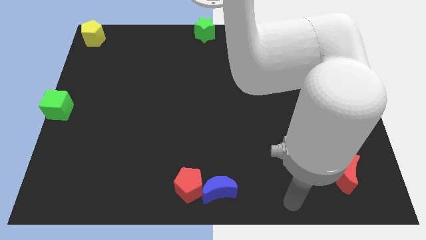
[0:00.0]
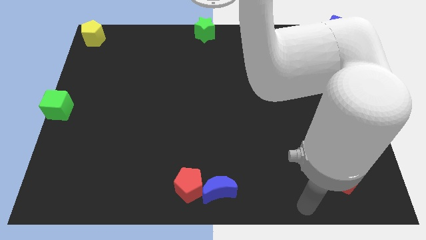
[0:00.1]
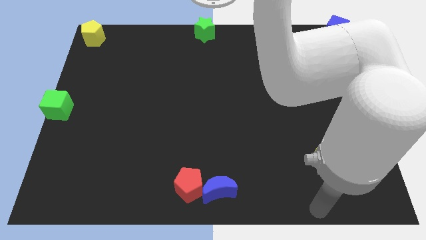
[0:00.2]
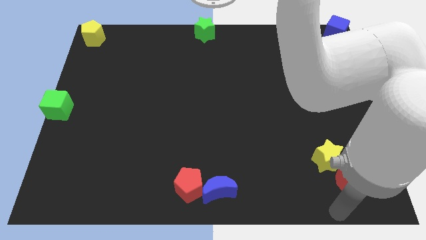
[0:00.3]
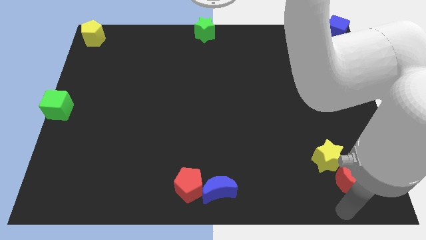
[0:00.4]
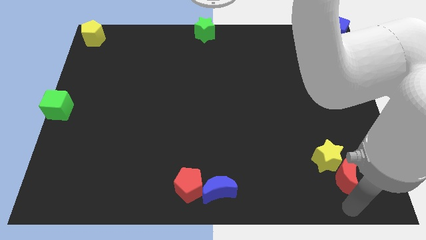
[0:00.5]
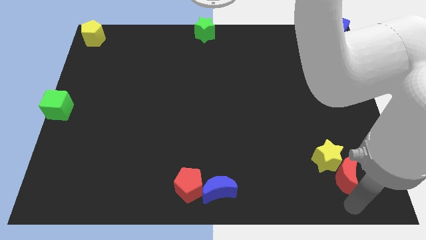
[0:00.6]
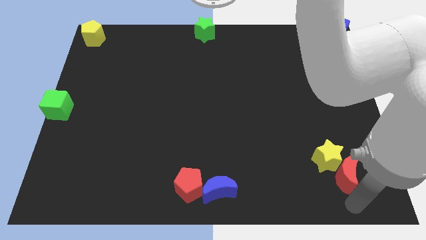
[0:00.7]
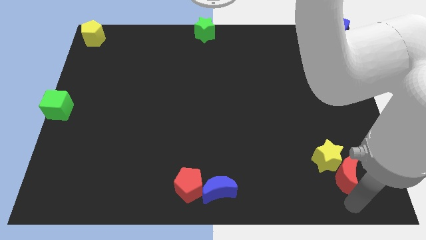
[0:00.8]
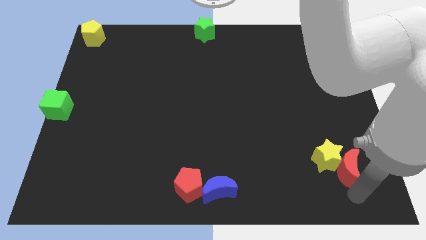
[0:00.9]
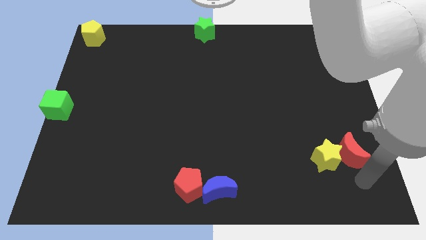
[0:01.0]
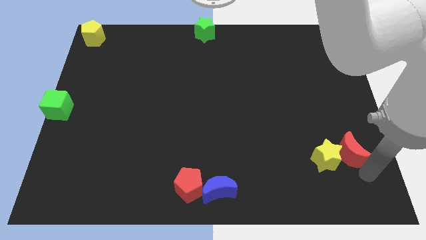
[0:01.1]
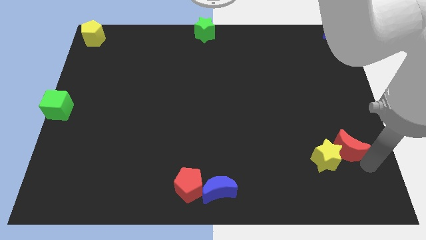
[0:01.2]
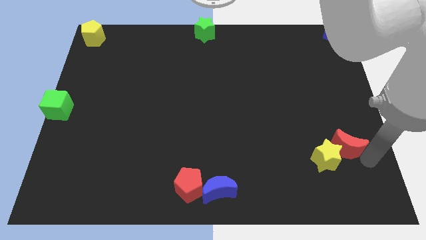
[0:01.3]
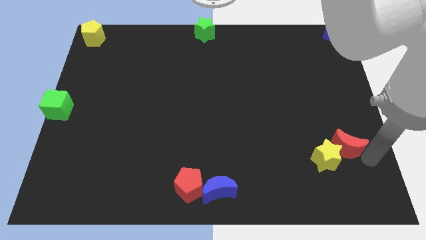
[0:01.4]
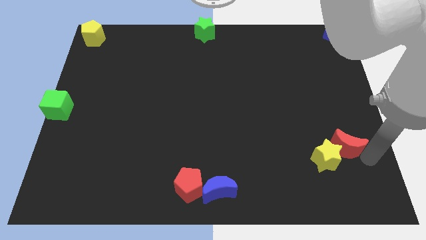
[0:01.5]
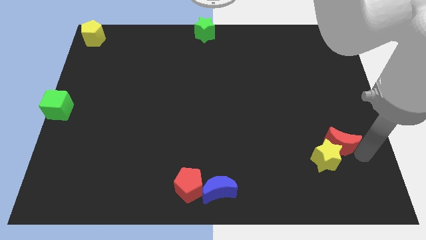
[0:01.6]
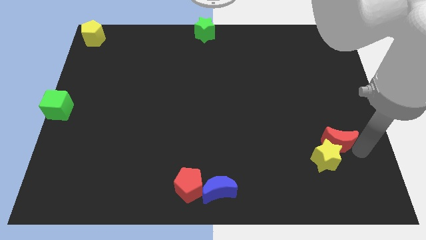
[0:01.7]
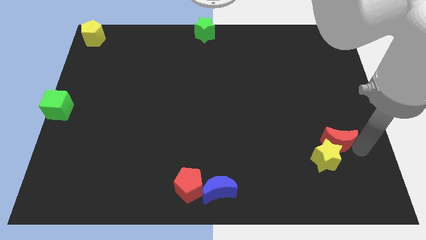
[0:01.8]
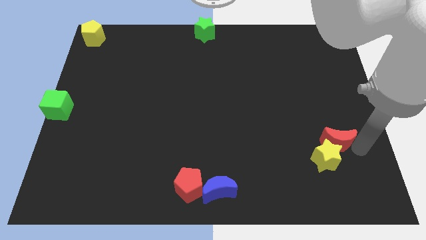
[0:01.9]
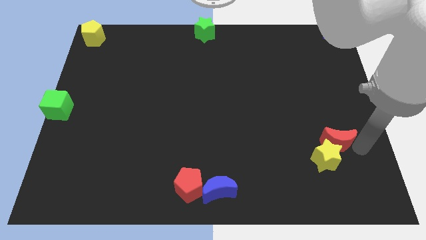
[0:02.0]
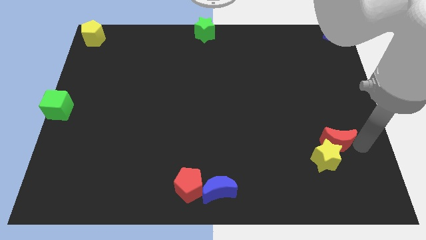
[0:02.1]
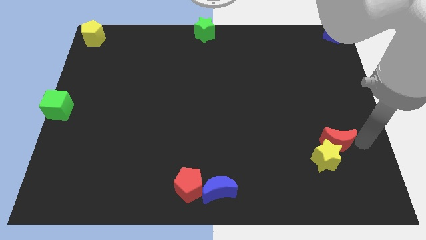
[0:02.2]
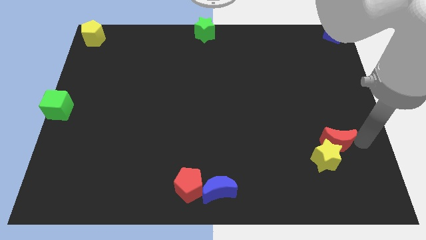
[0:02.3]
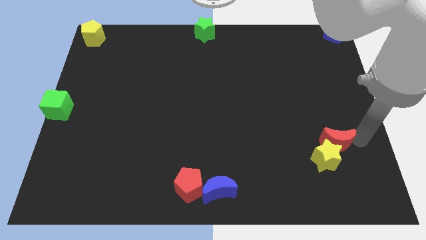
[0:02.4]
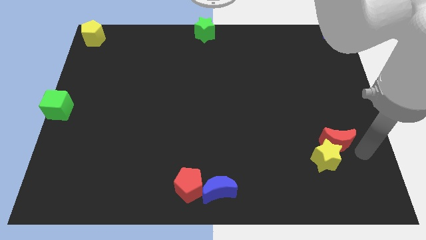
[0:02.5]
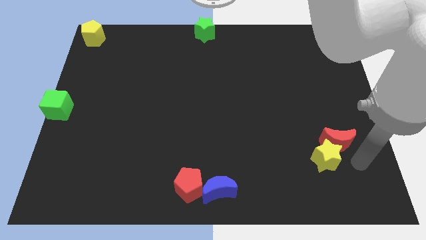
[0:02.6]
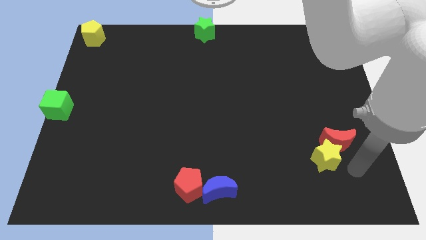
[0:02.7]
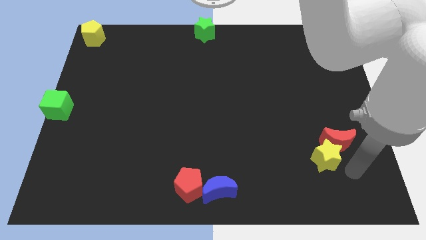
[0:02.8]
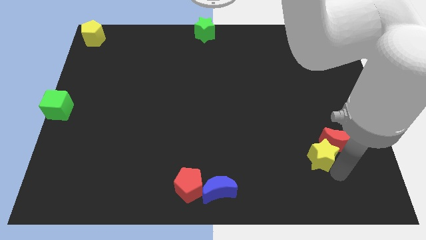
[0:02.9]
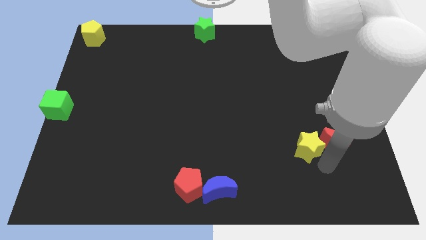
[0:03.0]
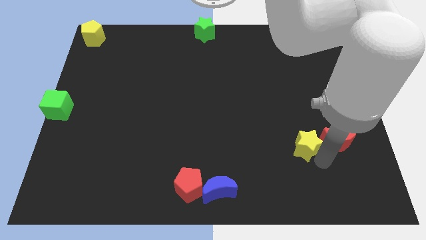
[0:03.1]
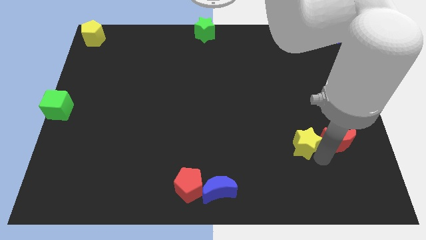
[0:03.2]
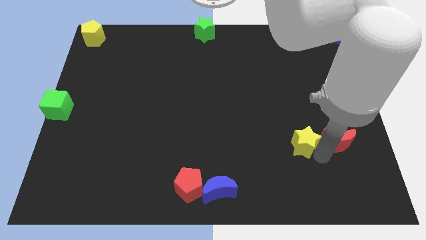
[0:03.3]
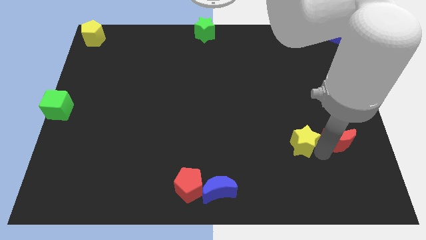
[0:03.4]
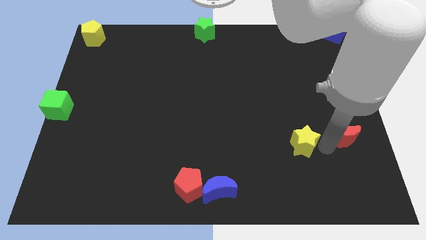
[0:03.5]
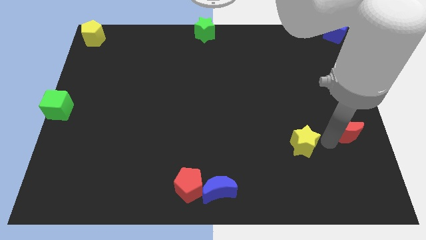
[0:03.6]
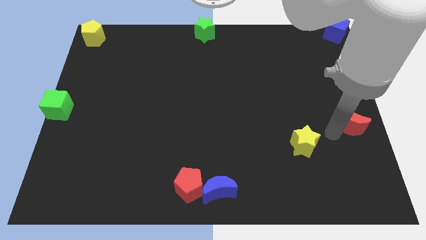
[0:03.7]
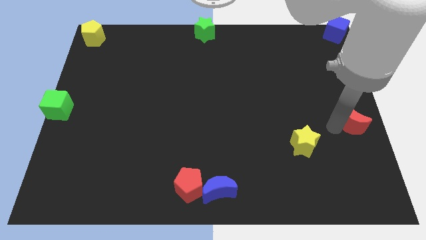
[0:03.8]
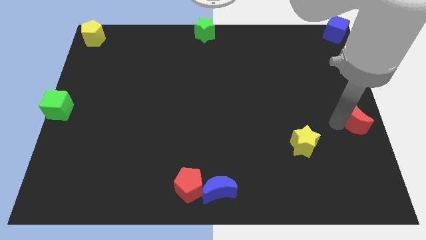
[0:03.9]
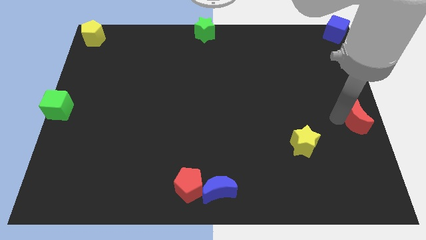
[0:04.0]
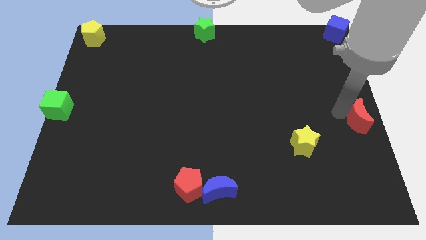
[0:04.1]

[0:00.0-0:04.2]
separate red moon and yellow star from each other

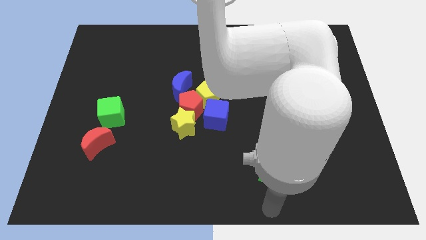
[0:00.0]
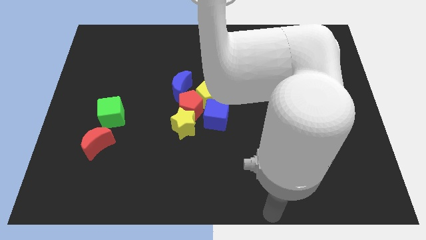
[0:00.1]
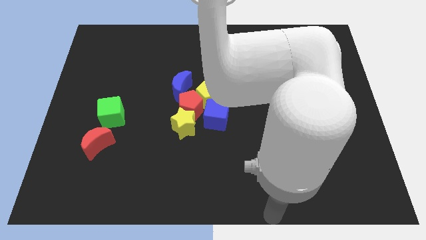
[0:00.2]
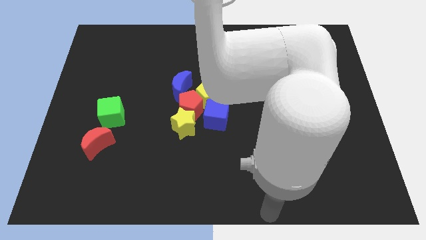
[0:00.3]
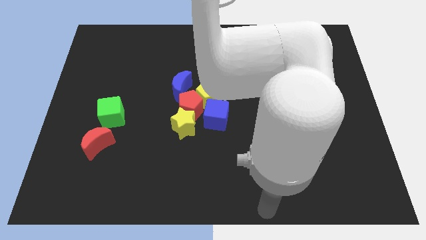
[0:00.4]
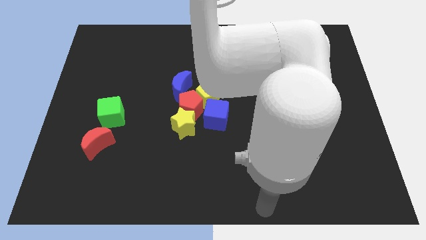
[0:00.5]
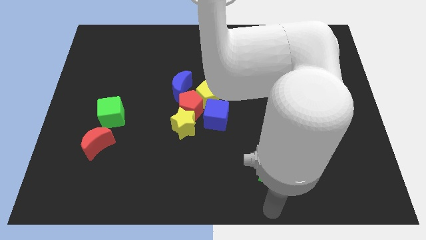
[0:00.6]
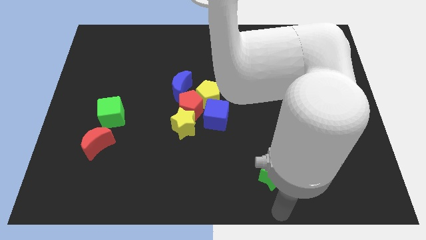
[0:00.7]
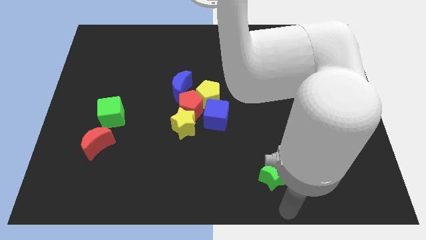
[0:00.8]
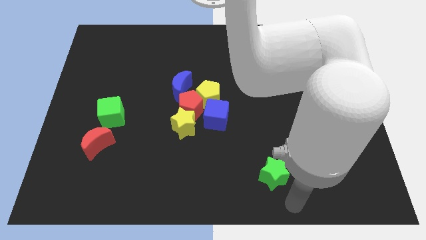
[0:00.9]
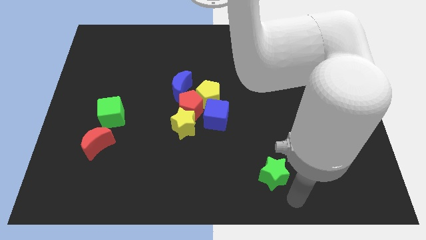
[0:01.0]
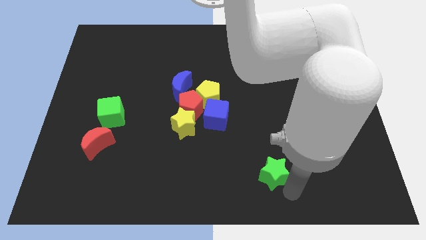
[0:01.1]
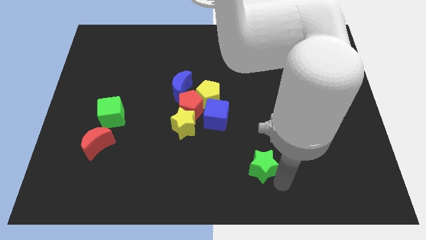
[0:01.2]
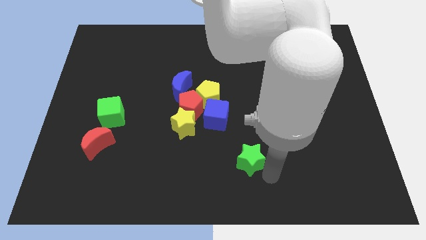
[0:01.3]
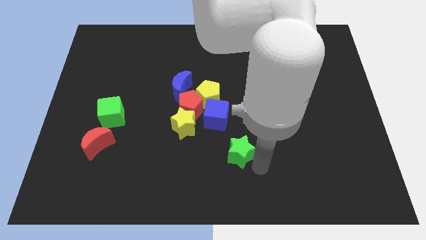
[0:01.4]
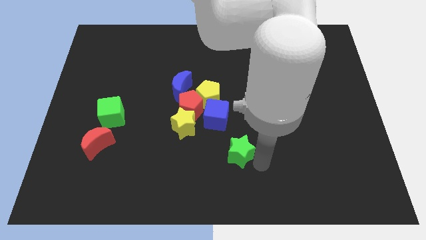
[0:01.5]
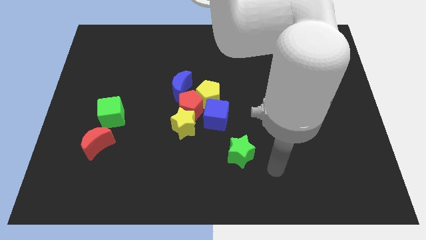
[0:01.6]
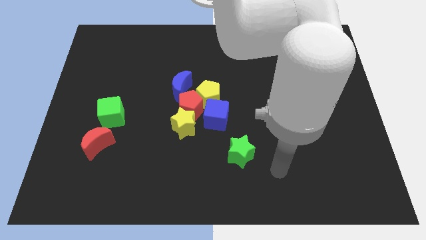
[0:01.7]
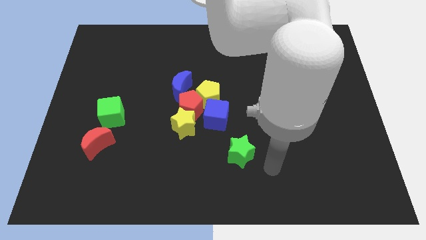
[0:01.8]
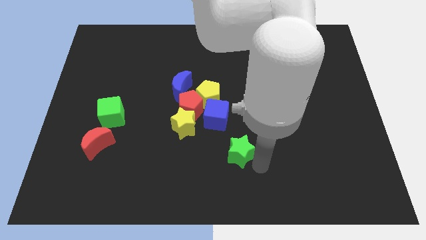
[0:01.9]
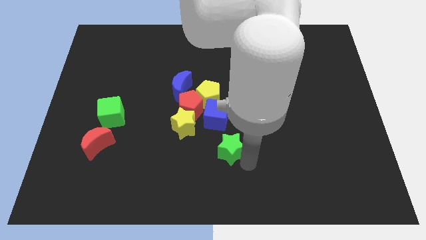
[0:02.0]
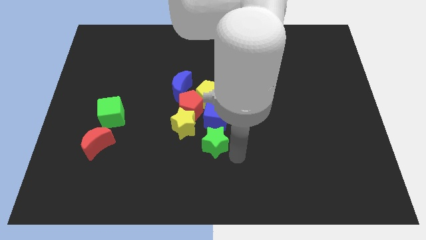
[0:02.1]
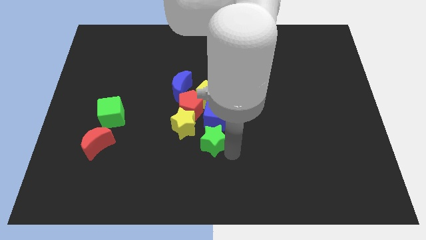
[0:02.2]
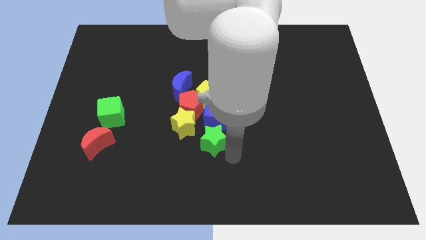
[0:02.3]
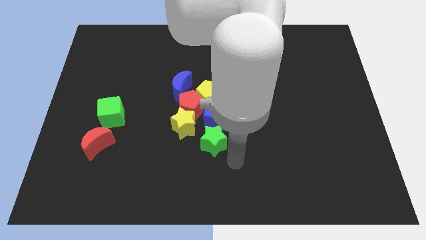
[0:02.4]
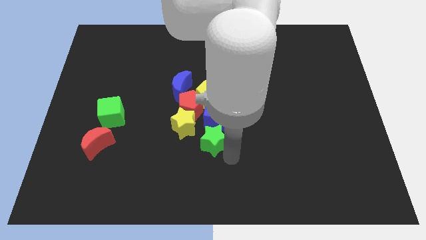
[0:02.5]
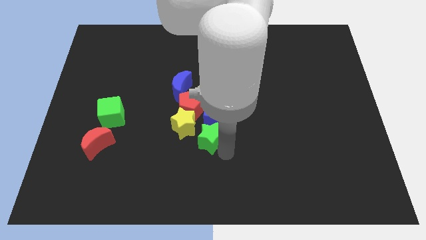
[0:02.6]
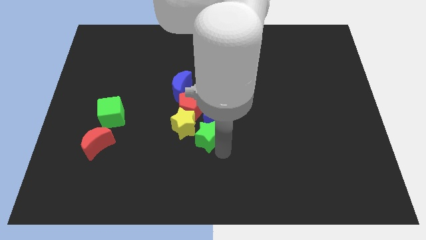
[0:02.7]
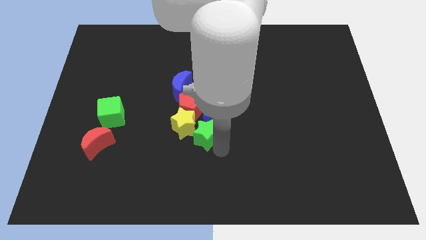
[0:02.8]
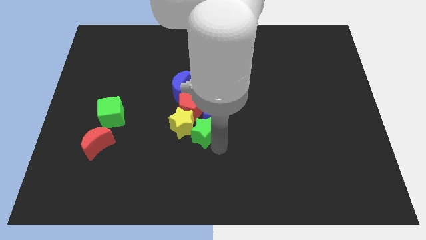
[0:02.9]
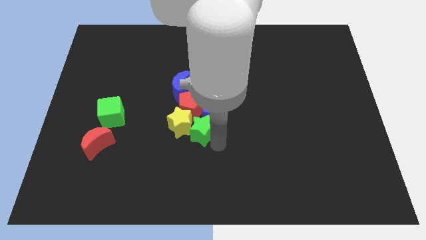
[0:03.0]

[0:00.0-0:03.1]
place the green star right to the yellow star

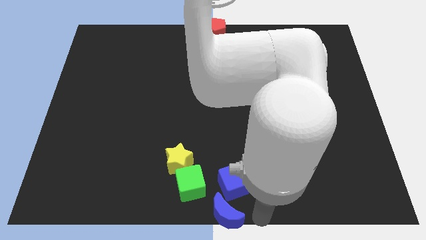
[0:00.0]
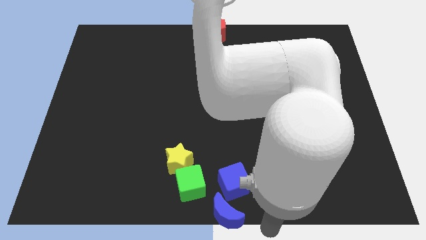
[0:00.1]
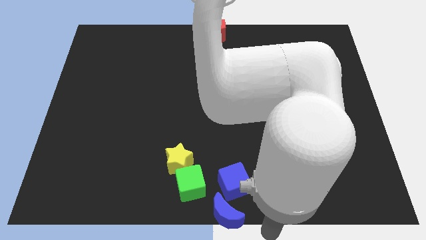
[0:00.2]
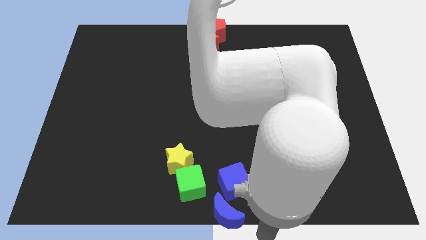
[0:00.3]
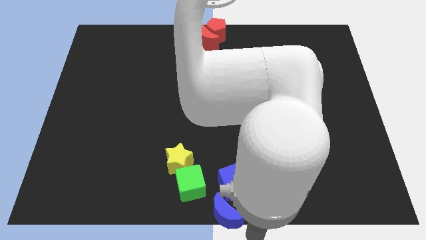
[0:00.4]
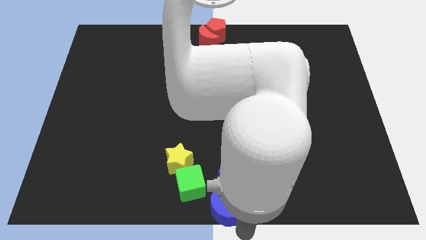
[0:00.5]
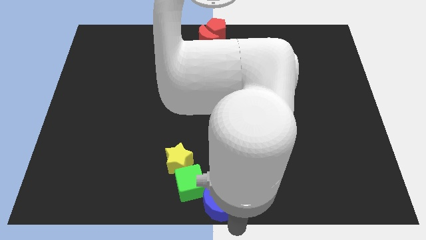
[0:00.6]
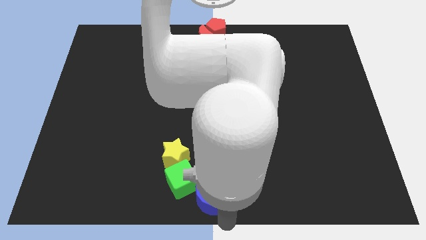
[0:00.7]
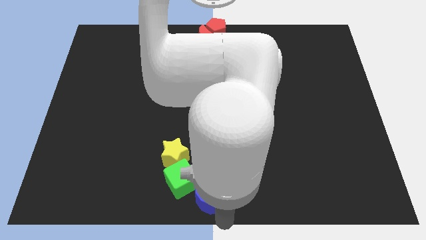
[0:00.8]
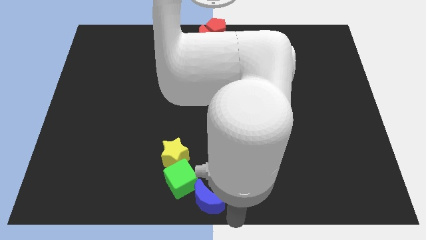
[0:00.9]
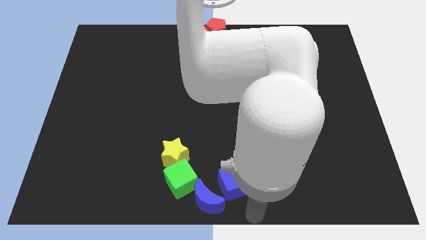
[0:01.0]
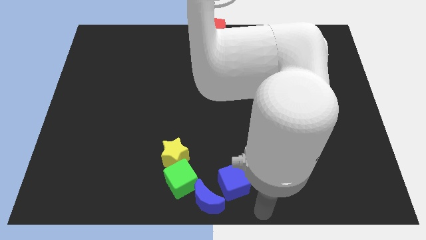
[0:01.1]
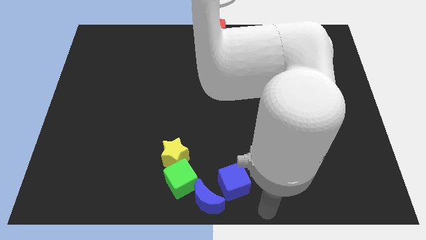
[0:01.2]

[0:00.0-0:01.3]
push the blue crescent into the green cube

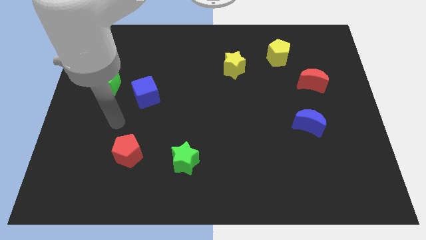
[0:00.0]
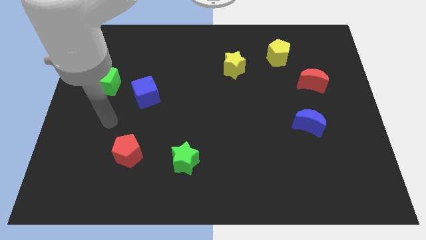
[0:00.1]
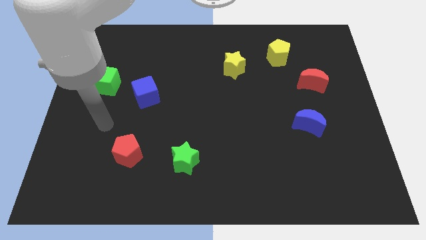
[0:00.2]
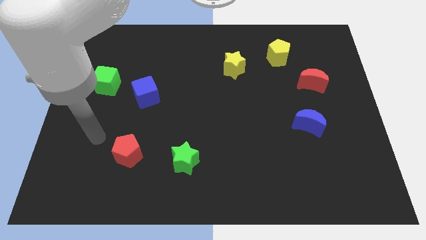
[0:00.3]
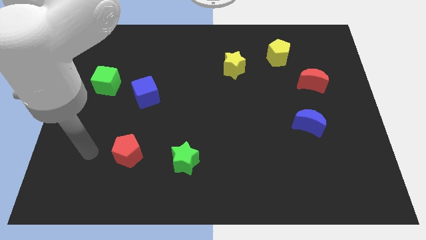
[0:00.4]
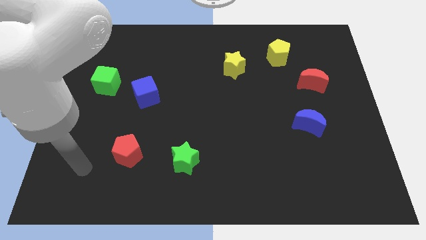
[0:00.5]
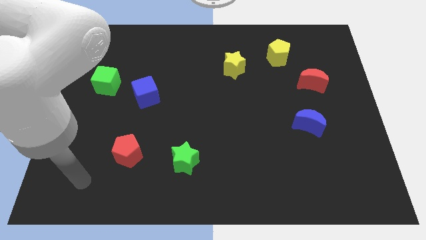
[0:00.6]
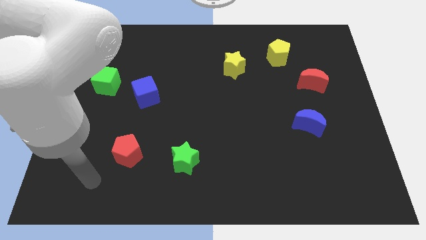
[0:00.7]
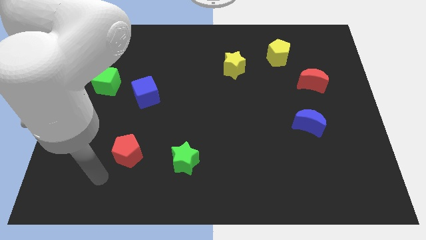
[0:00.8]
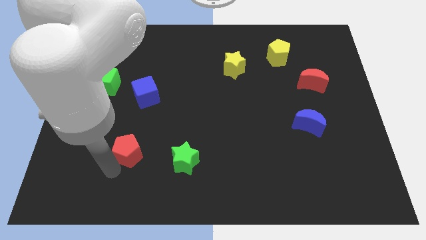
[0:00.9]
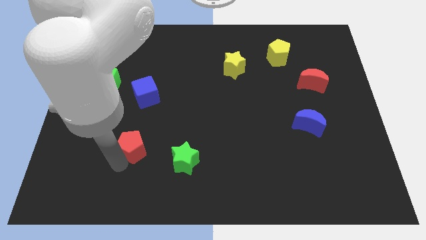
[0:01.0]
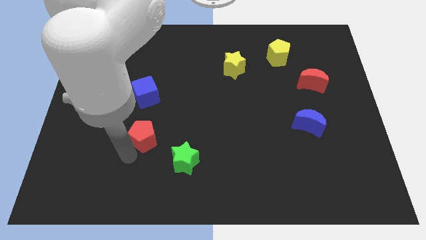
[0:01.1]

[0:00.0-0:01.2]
move the red pentagon vertically to the bottom of the blue cube
